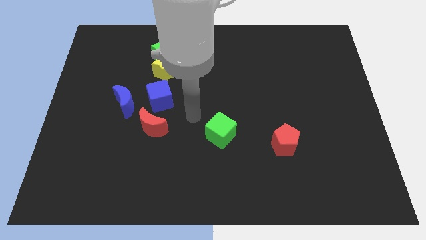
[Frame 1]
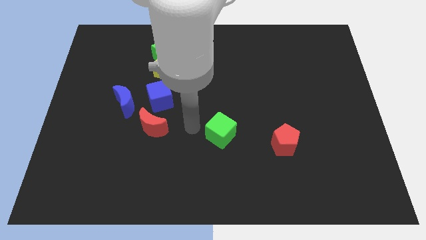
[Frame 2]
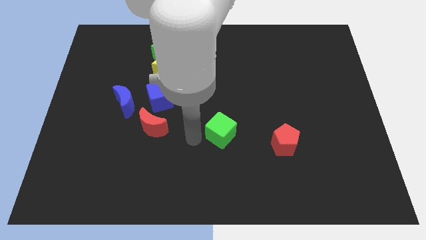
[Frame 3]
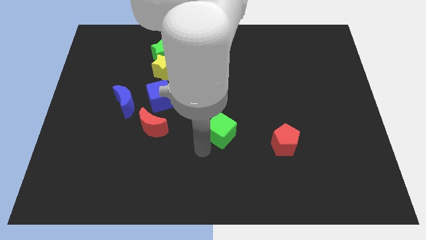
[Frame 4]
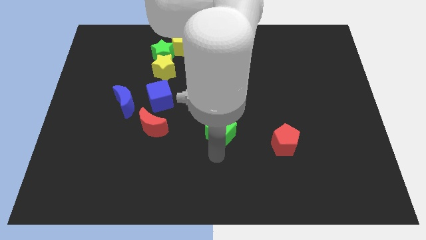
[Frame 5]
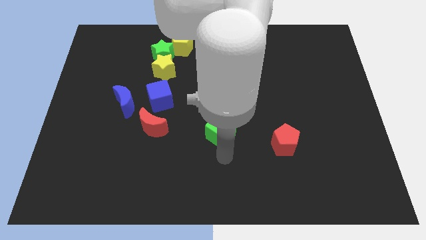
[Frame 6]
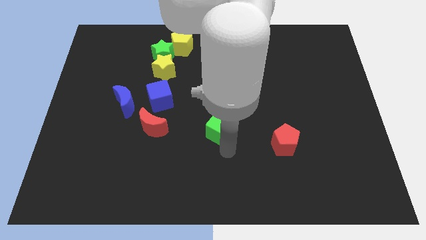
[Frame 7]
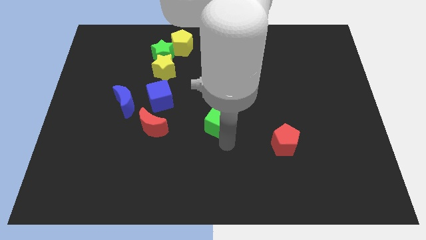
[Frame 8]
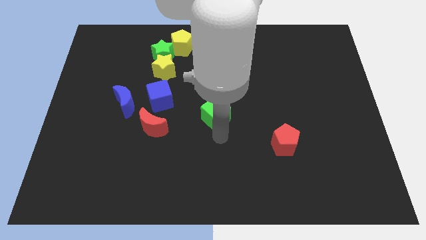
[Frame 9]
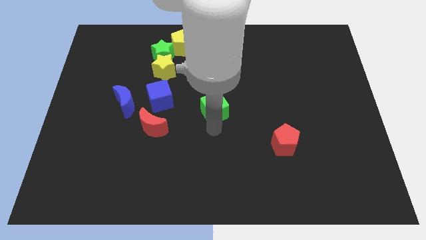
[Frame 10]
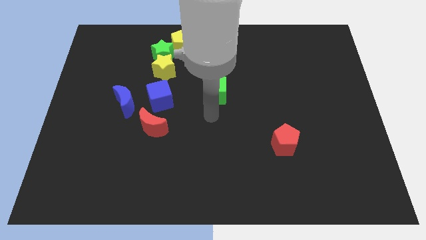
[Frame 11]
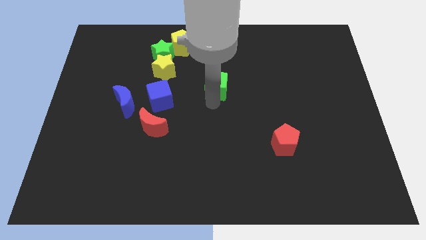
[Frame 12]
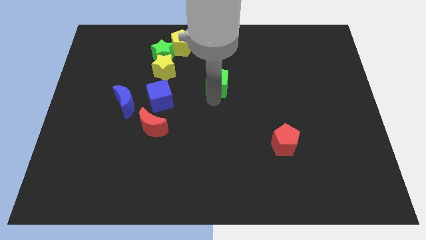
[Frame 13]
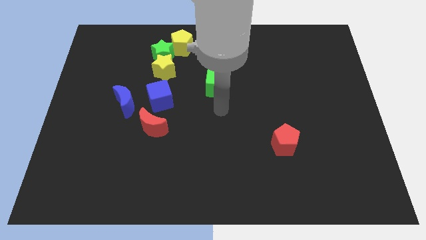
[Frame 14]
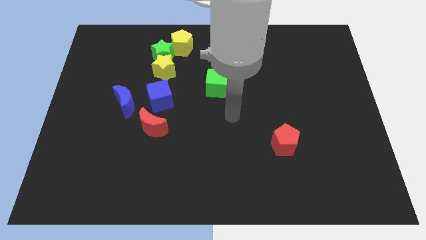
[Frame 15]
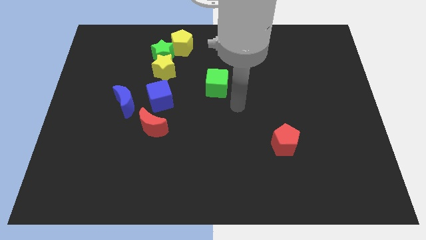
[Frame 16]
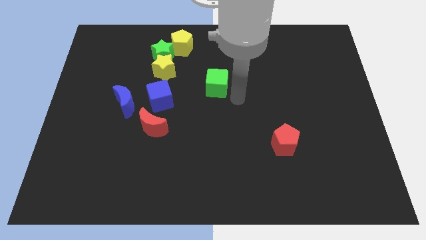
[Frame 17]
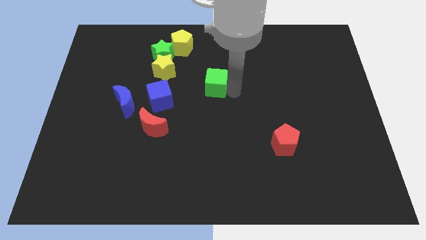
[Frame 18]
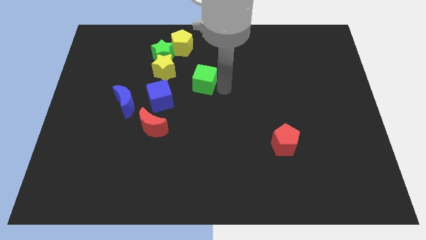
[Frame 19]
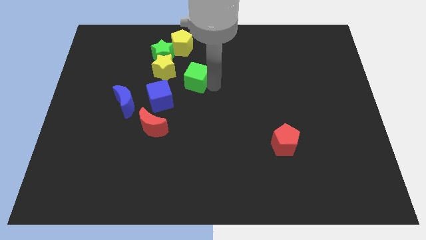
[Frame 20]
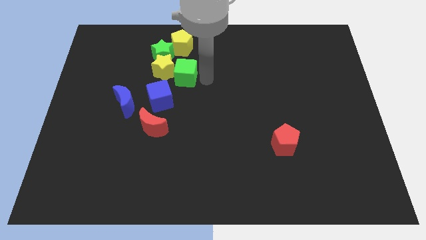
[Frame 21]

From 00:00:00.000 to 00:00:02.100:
move the green cube to right side of the yellow star

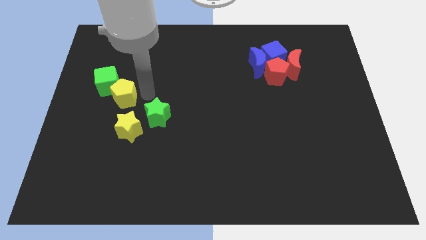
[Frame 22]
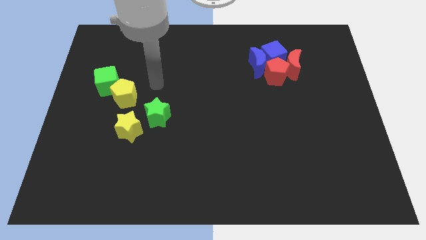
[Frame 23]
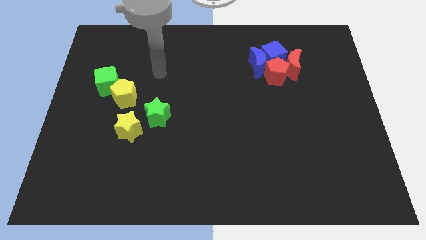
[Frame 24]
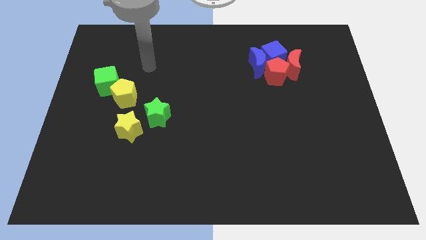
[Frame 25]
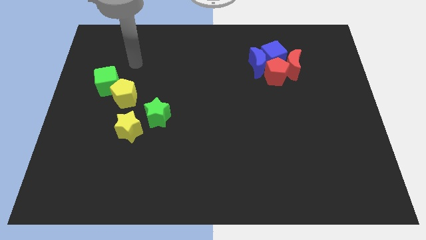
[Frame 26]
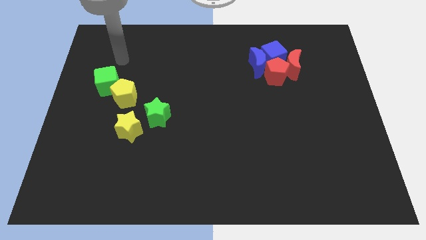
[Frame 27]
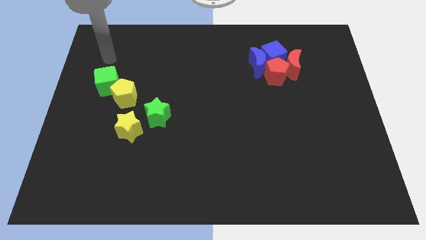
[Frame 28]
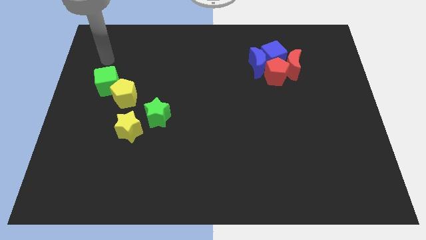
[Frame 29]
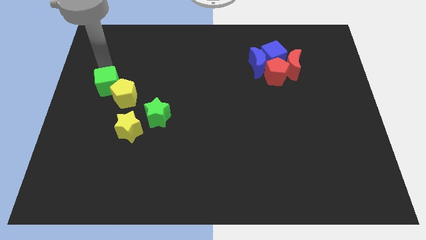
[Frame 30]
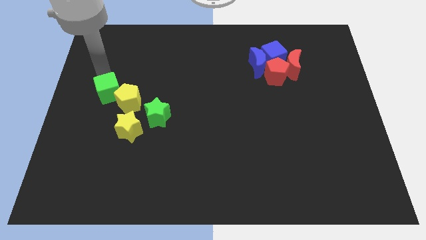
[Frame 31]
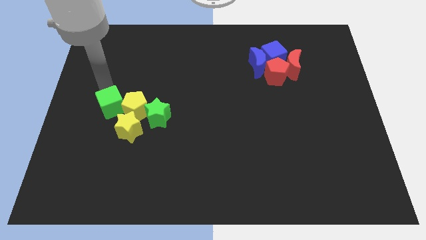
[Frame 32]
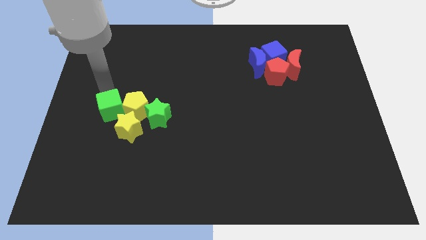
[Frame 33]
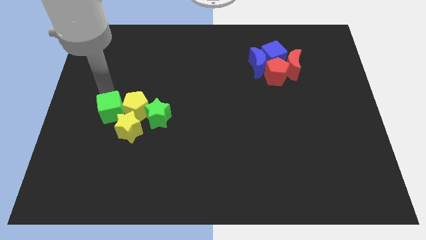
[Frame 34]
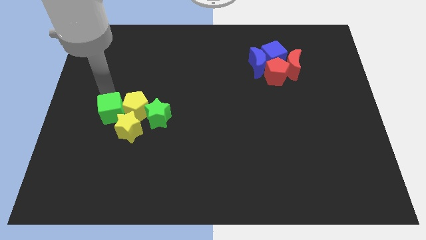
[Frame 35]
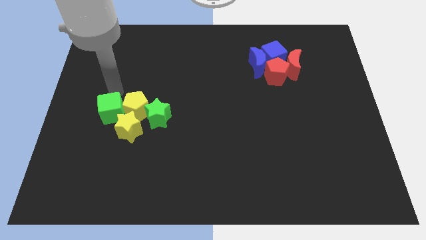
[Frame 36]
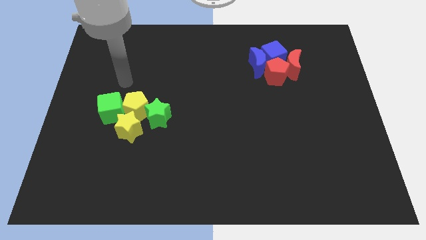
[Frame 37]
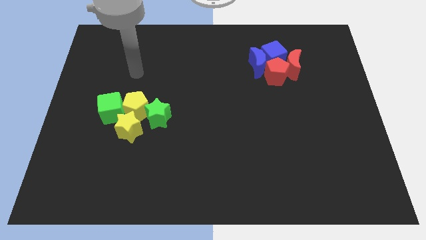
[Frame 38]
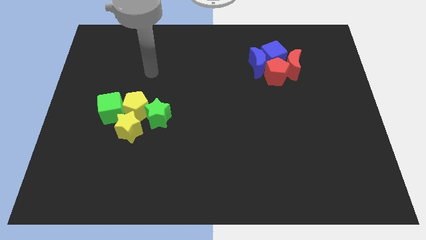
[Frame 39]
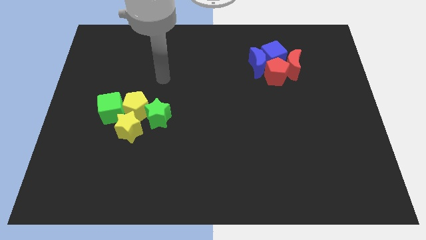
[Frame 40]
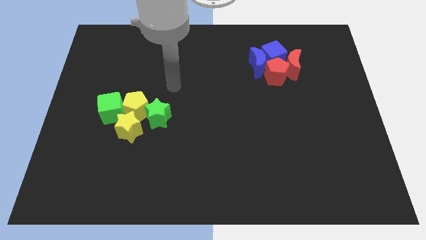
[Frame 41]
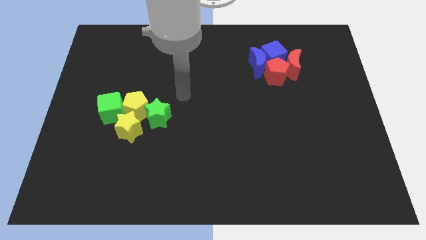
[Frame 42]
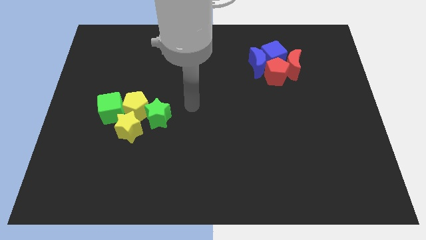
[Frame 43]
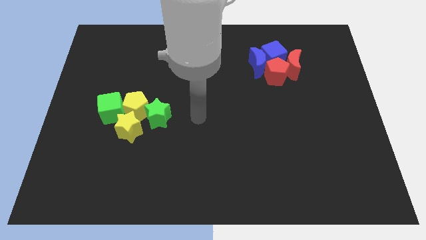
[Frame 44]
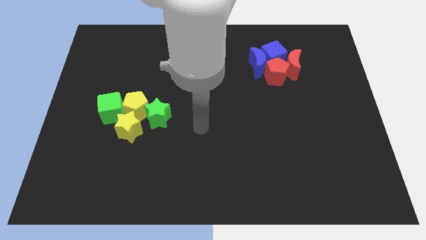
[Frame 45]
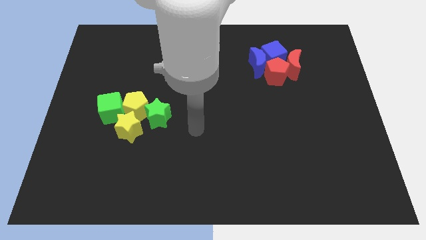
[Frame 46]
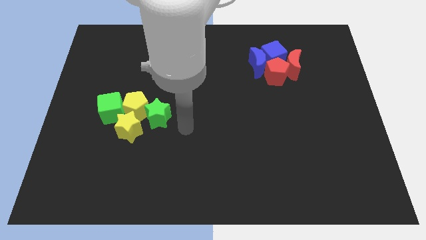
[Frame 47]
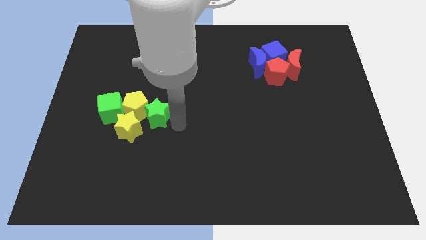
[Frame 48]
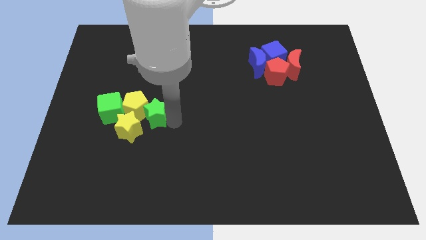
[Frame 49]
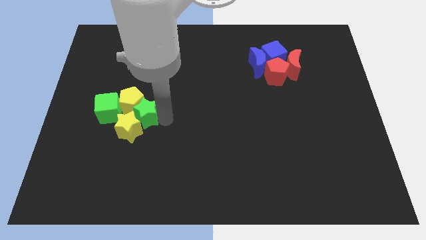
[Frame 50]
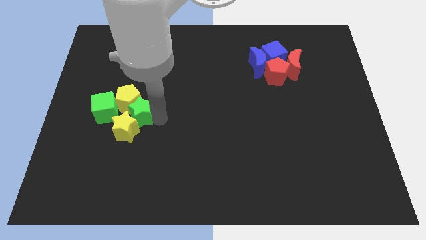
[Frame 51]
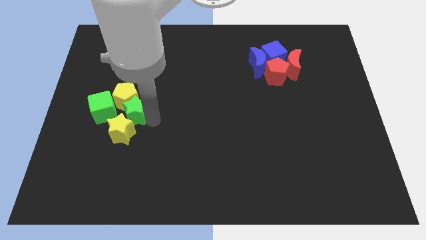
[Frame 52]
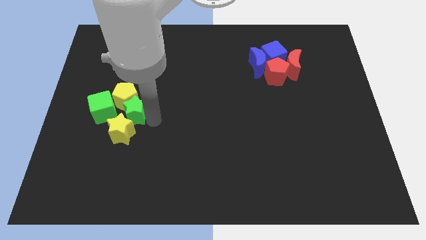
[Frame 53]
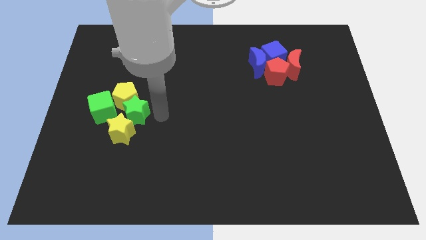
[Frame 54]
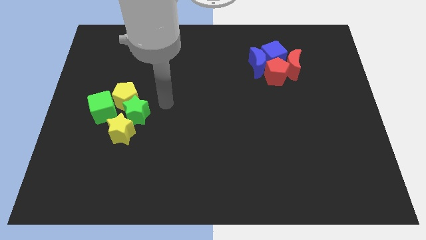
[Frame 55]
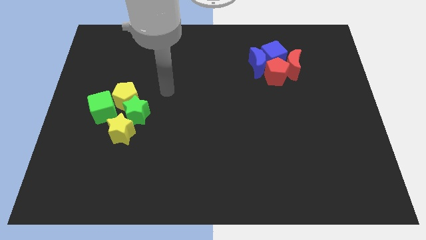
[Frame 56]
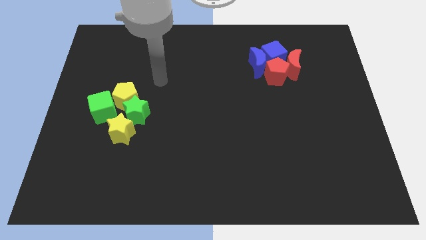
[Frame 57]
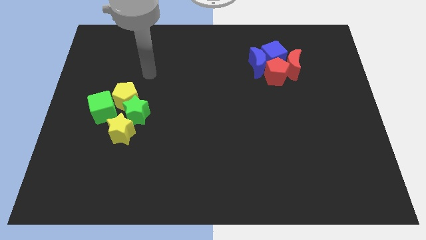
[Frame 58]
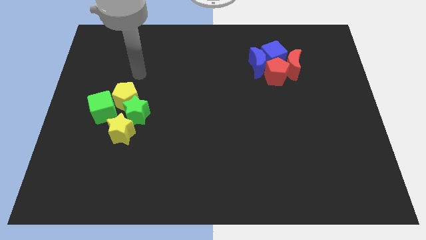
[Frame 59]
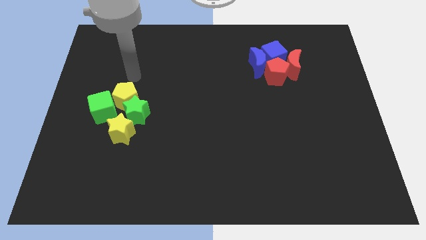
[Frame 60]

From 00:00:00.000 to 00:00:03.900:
adjust the green and yellow blocks at the left center of the board

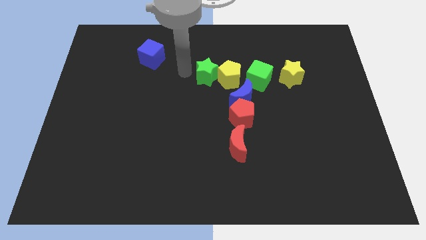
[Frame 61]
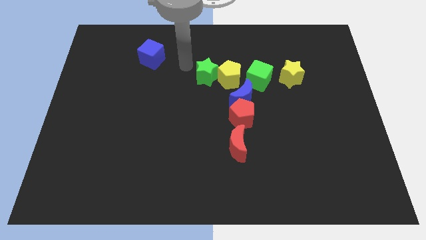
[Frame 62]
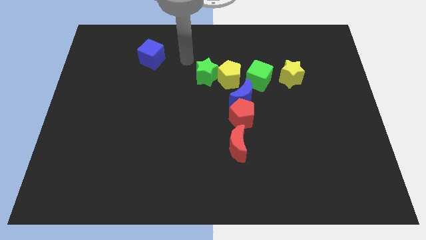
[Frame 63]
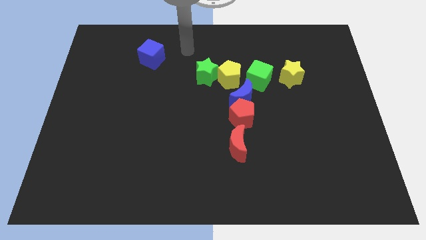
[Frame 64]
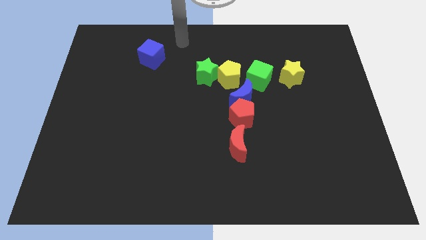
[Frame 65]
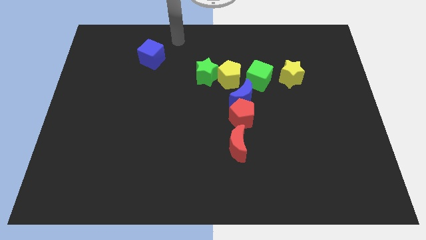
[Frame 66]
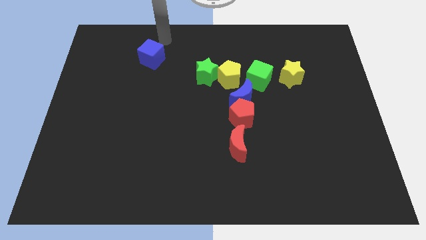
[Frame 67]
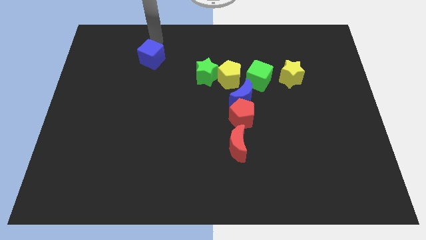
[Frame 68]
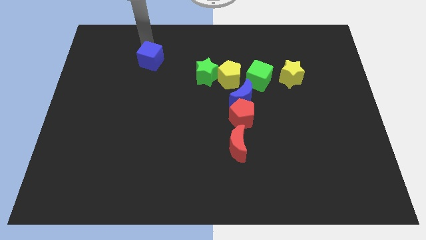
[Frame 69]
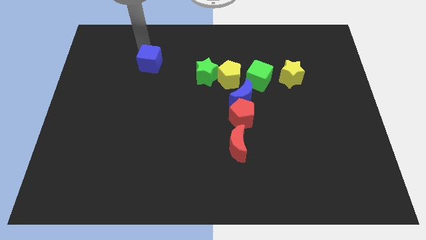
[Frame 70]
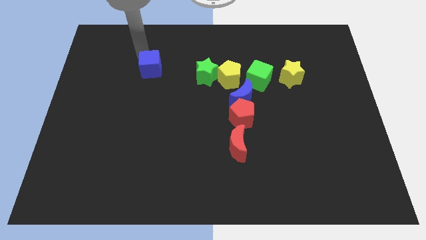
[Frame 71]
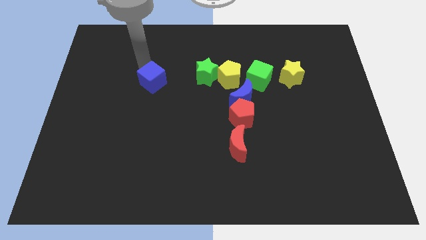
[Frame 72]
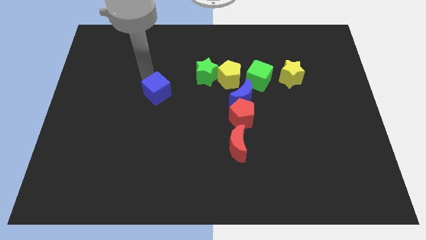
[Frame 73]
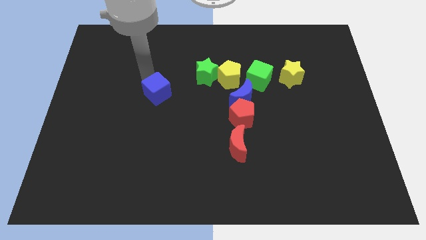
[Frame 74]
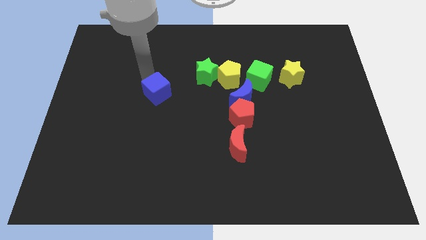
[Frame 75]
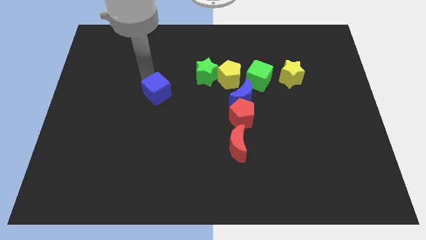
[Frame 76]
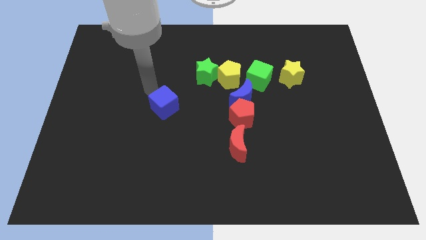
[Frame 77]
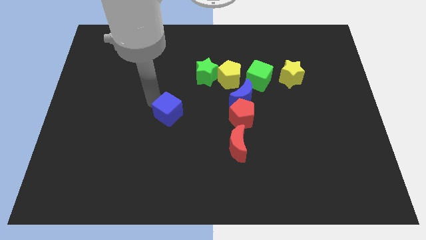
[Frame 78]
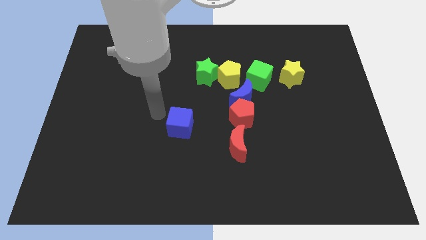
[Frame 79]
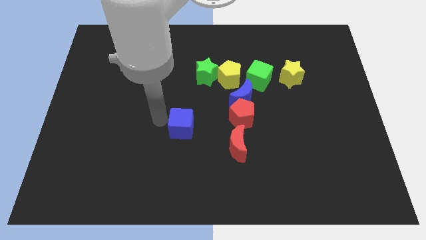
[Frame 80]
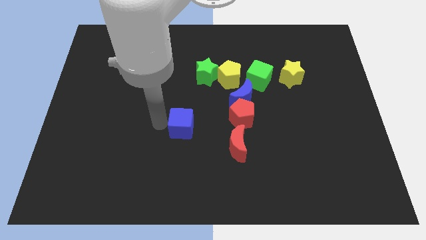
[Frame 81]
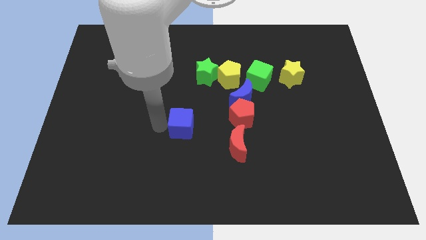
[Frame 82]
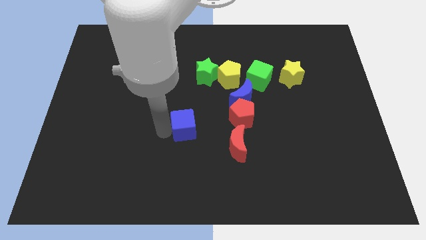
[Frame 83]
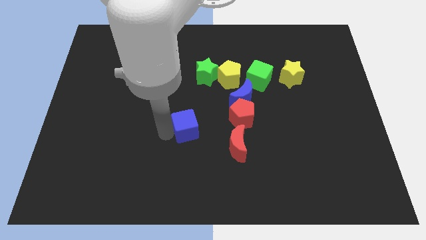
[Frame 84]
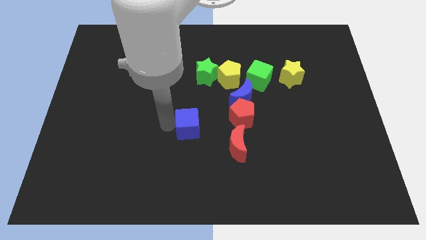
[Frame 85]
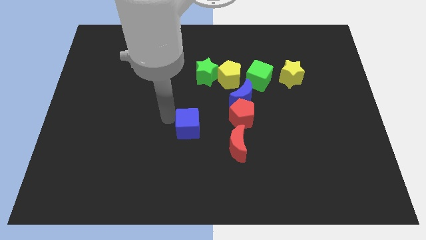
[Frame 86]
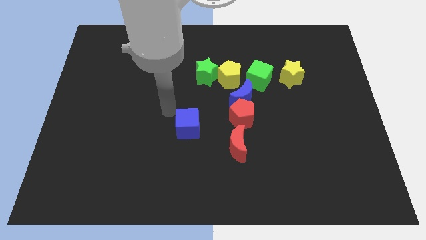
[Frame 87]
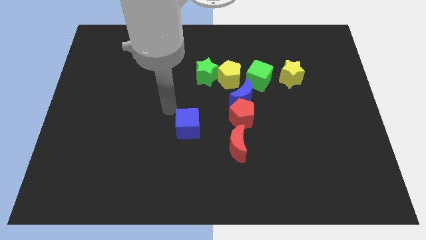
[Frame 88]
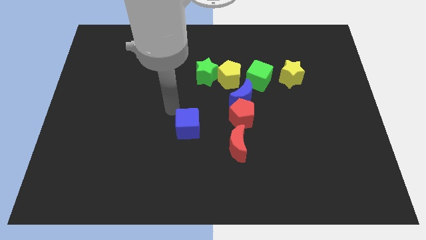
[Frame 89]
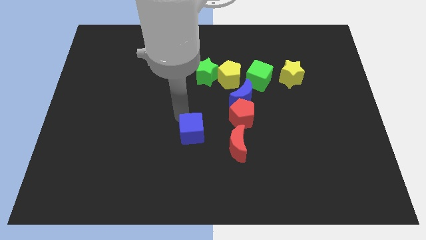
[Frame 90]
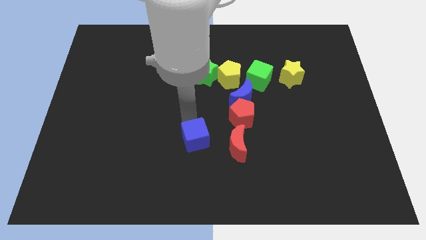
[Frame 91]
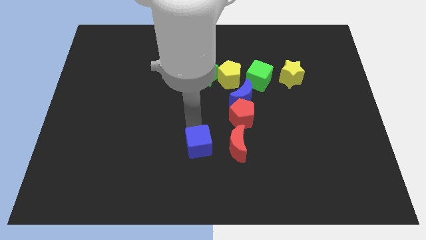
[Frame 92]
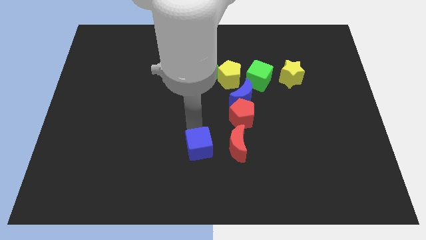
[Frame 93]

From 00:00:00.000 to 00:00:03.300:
put the blue cube to the left side of red moon
